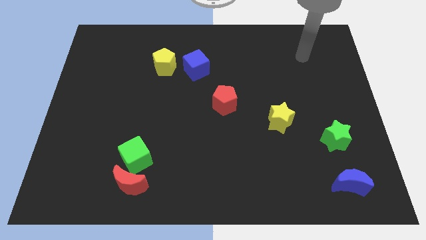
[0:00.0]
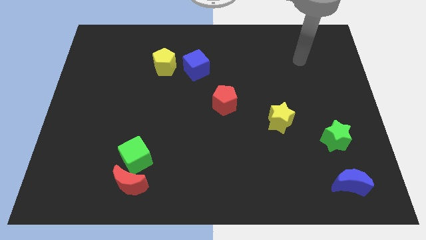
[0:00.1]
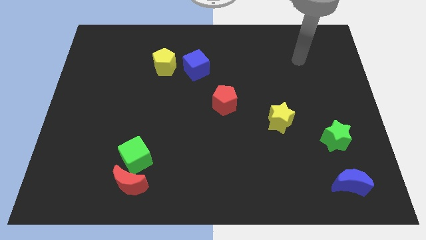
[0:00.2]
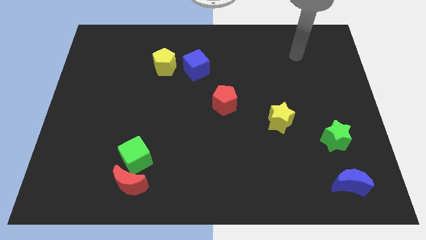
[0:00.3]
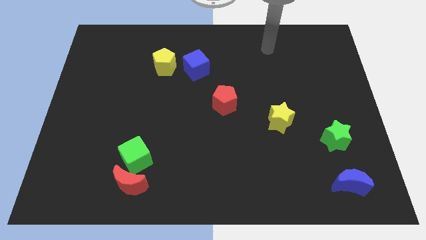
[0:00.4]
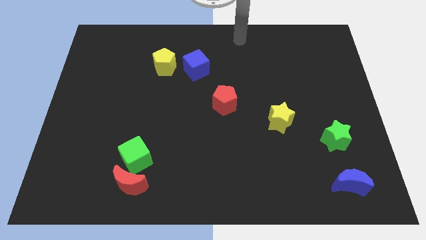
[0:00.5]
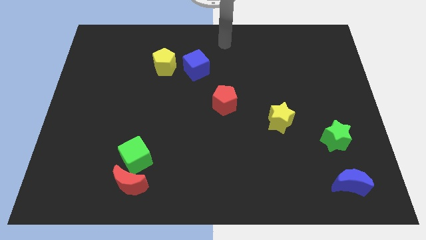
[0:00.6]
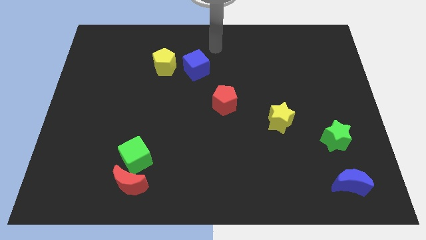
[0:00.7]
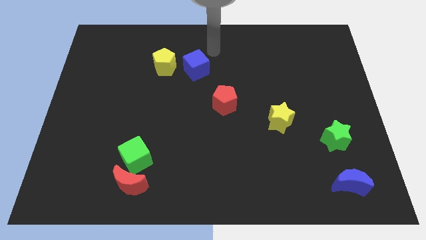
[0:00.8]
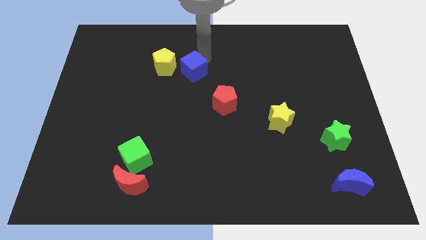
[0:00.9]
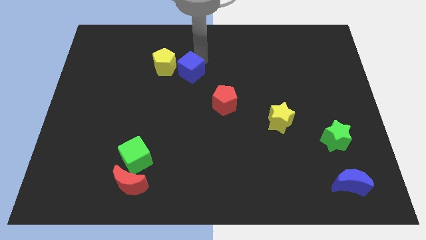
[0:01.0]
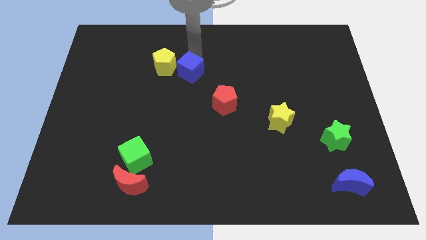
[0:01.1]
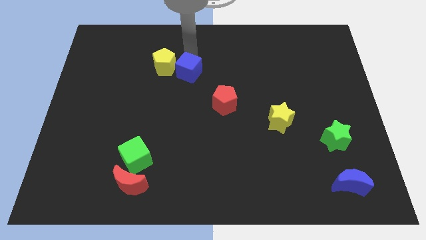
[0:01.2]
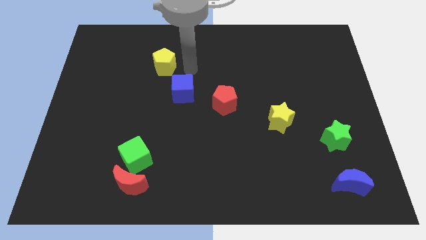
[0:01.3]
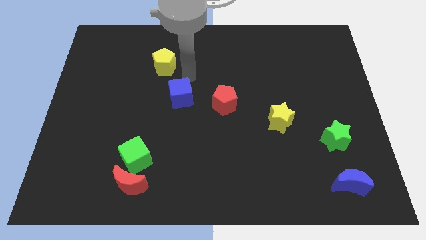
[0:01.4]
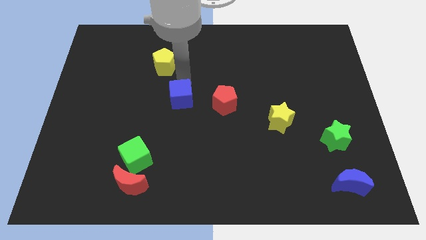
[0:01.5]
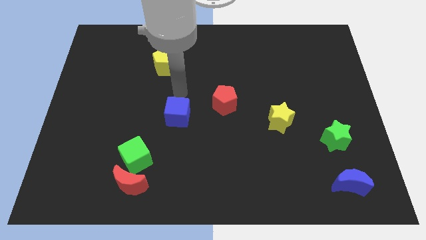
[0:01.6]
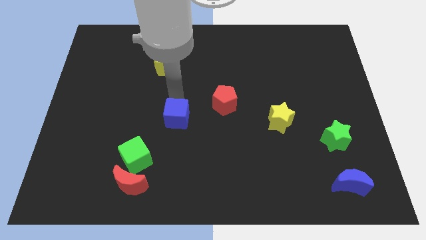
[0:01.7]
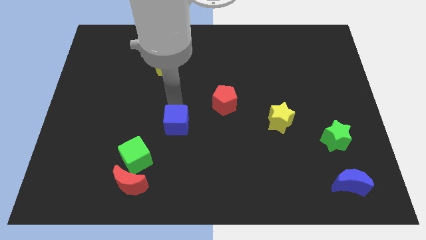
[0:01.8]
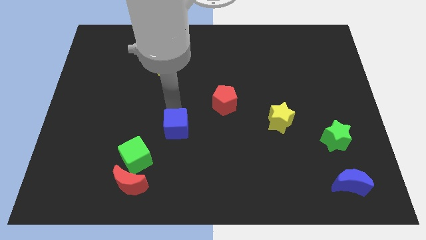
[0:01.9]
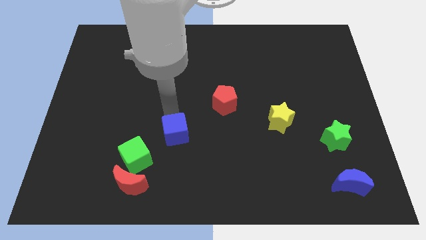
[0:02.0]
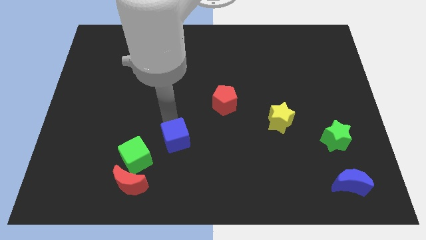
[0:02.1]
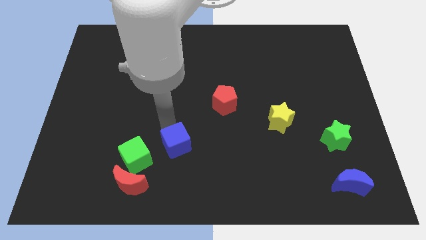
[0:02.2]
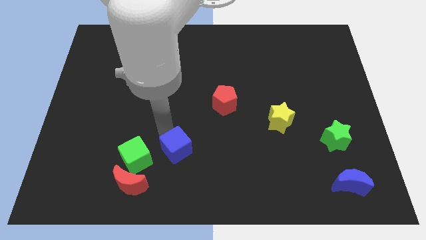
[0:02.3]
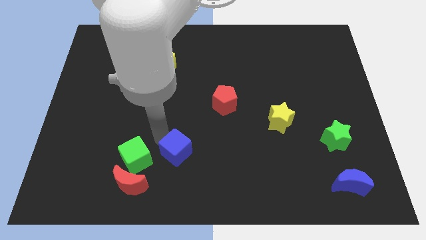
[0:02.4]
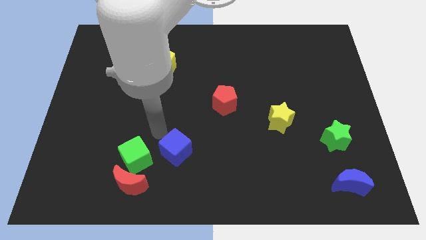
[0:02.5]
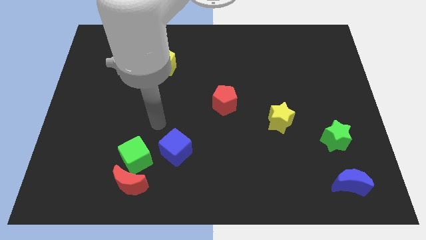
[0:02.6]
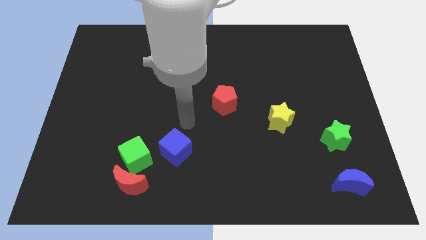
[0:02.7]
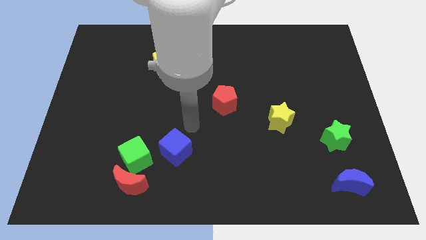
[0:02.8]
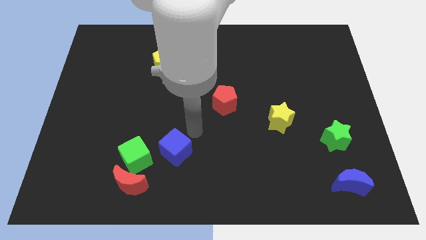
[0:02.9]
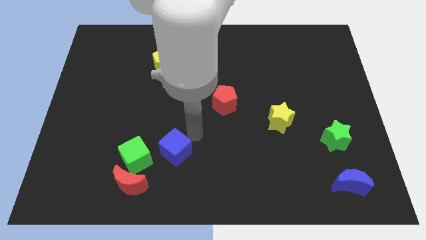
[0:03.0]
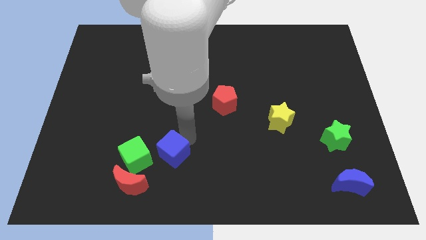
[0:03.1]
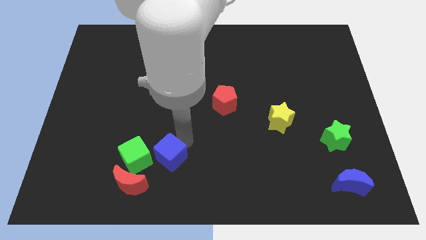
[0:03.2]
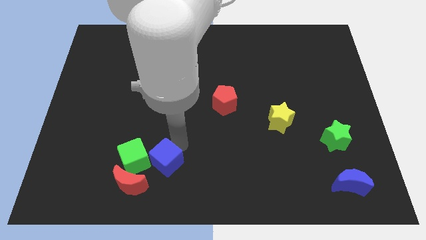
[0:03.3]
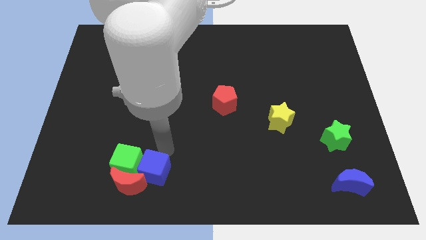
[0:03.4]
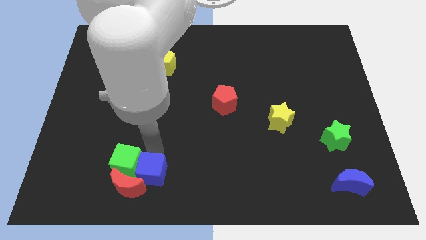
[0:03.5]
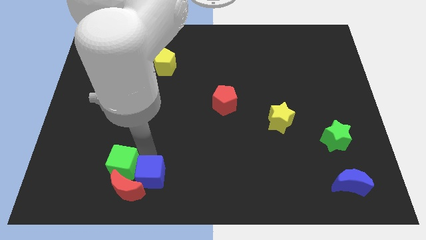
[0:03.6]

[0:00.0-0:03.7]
slide the blue cube towards the red moon

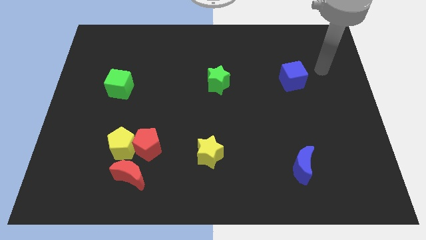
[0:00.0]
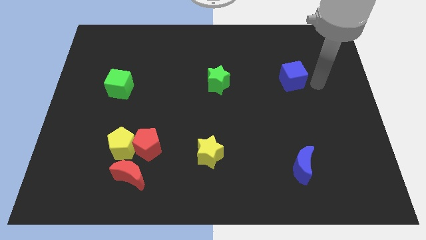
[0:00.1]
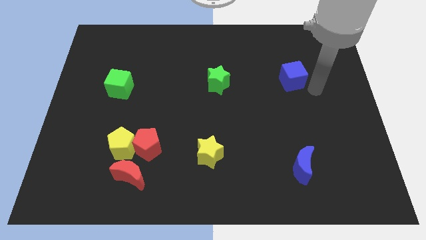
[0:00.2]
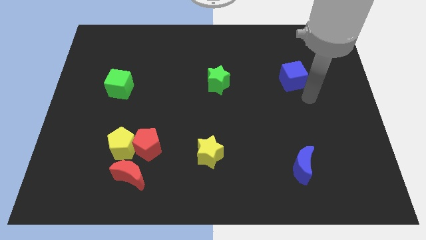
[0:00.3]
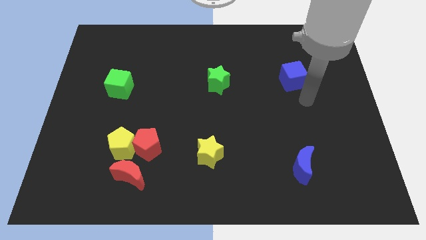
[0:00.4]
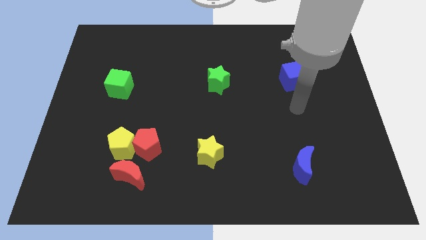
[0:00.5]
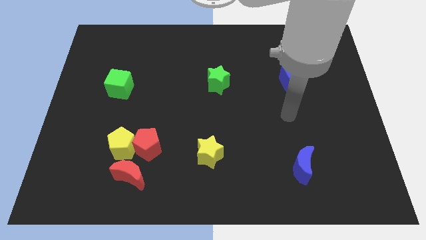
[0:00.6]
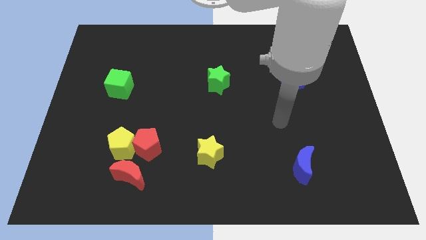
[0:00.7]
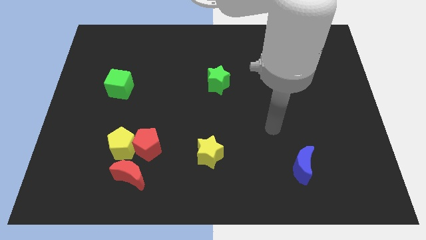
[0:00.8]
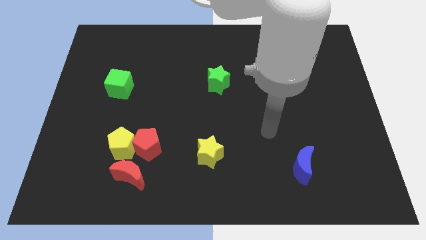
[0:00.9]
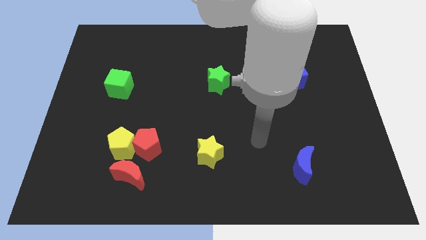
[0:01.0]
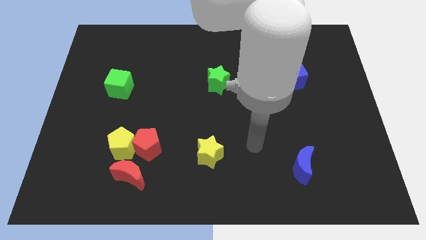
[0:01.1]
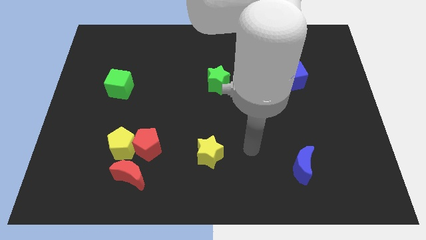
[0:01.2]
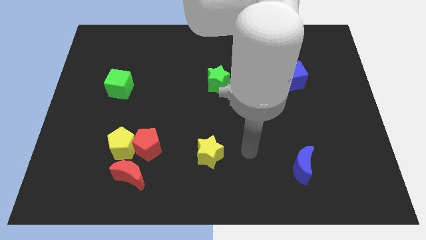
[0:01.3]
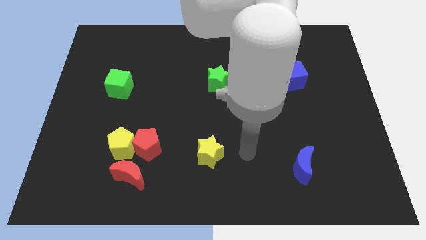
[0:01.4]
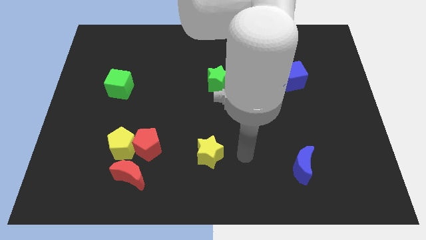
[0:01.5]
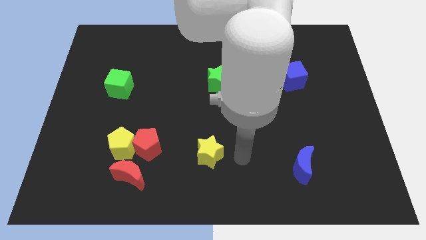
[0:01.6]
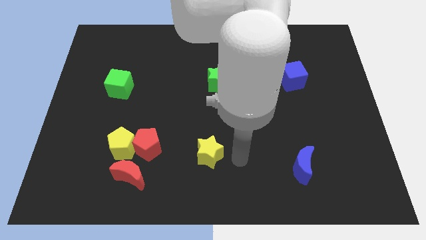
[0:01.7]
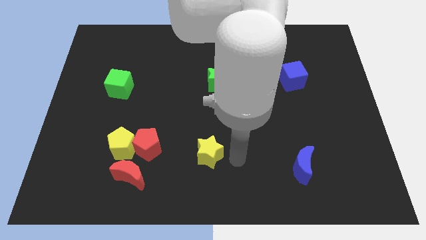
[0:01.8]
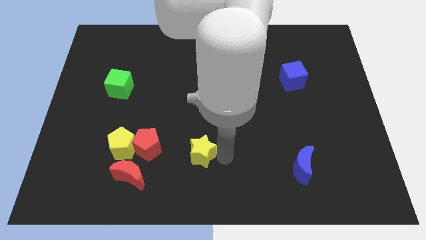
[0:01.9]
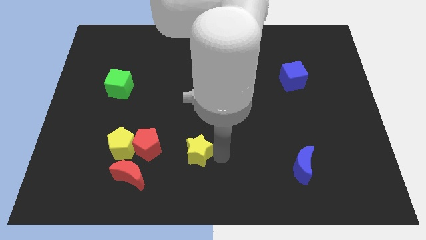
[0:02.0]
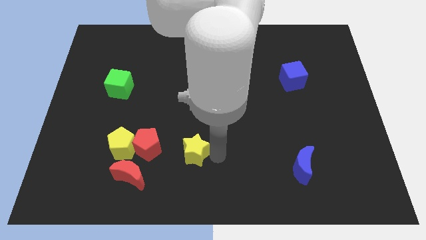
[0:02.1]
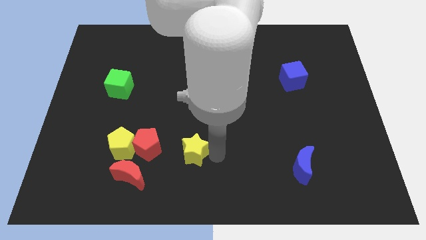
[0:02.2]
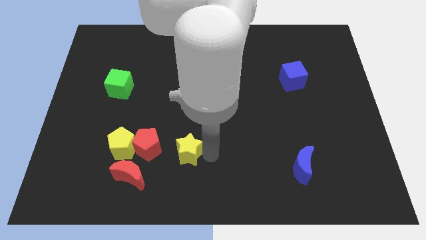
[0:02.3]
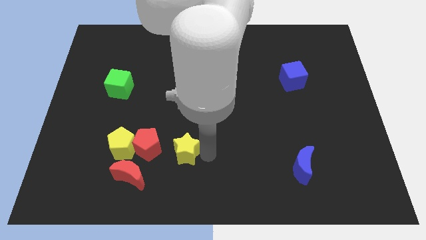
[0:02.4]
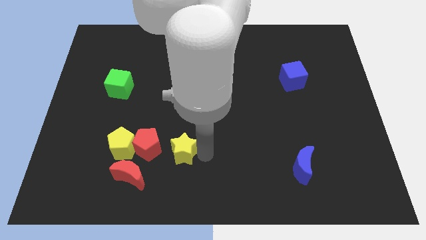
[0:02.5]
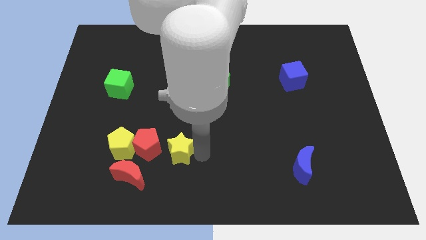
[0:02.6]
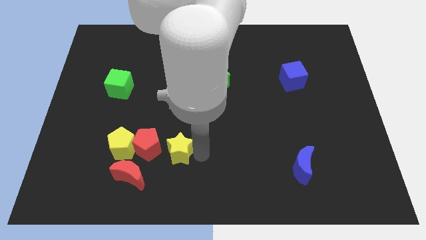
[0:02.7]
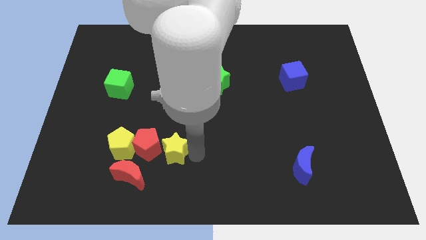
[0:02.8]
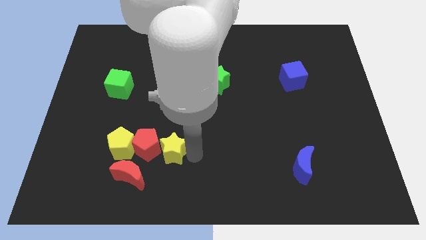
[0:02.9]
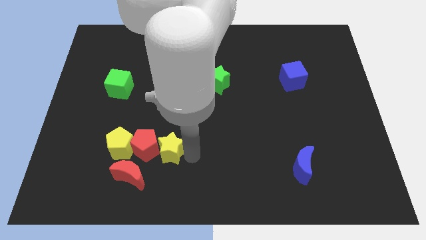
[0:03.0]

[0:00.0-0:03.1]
move the yellow star next to the red pentagon

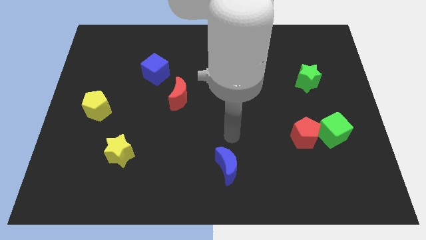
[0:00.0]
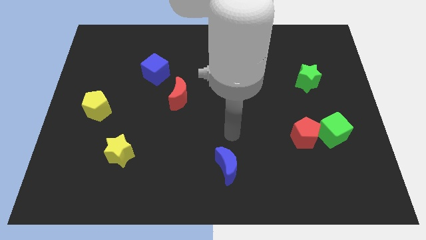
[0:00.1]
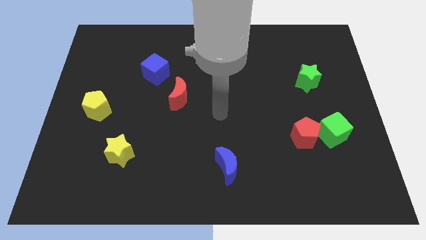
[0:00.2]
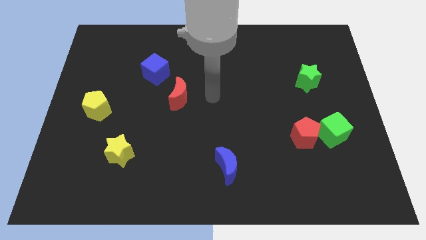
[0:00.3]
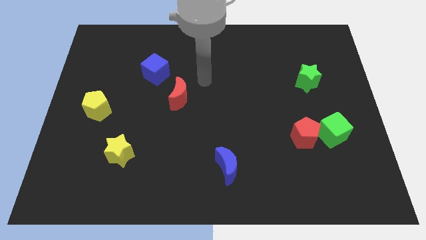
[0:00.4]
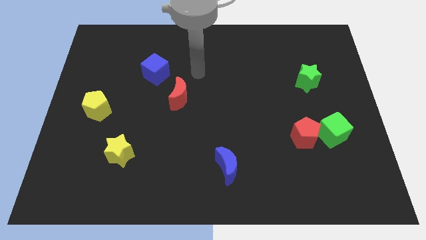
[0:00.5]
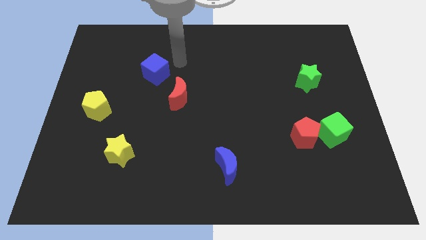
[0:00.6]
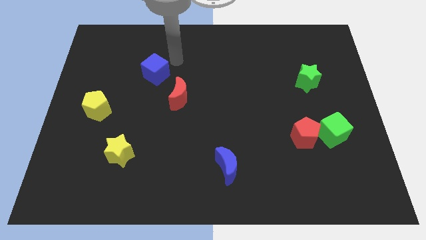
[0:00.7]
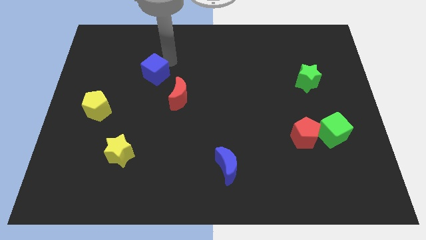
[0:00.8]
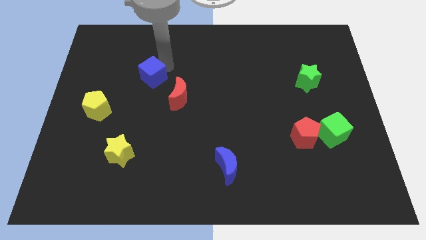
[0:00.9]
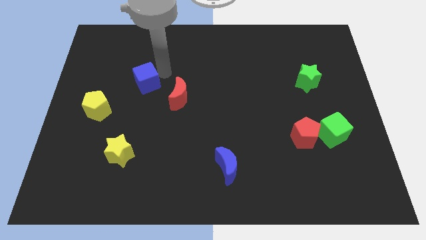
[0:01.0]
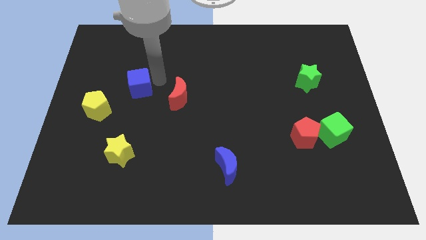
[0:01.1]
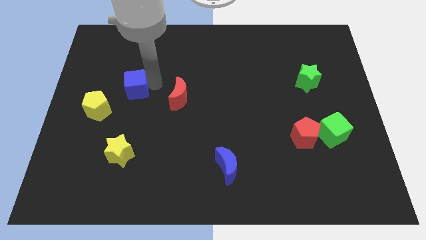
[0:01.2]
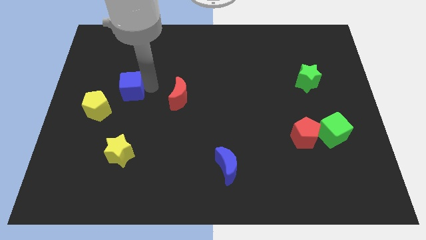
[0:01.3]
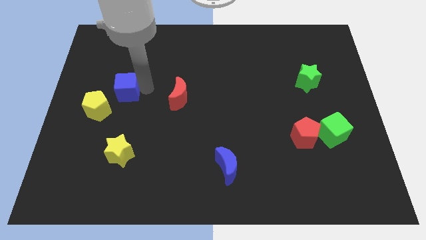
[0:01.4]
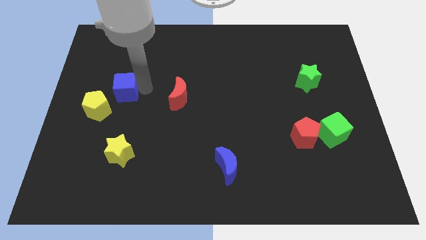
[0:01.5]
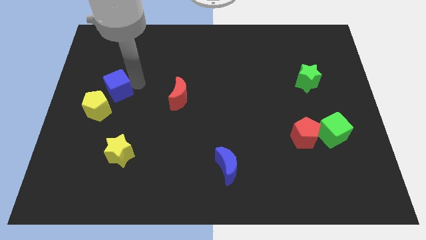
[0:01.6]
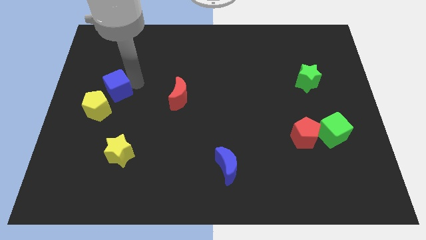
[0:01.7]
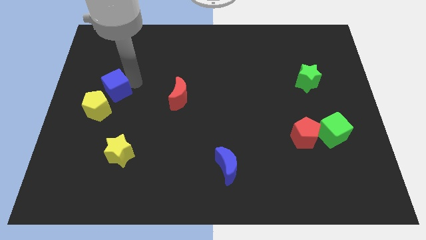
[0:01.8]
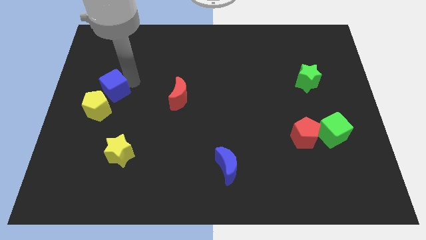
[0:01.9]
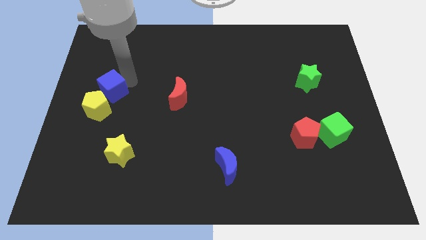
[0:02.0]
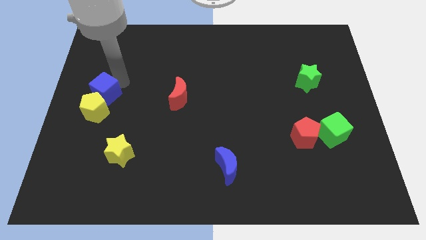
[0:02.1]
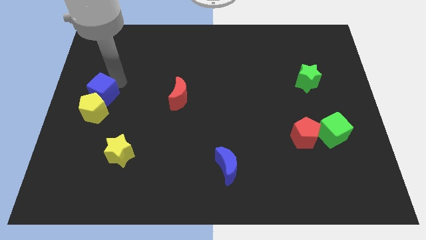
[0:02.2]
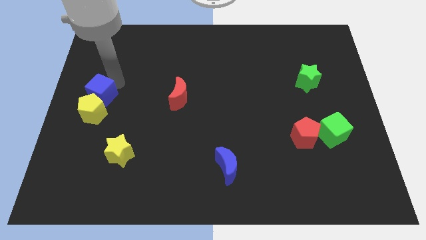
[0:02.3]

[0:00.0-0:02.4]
move the blue cube next to the yellow pentagon
